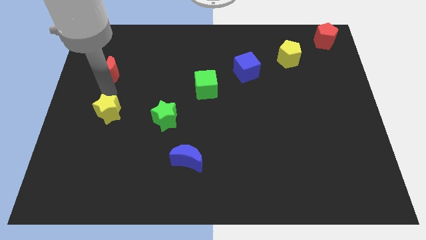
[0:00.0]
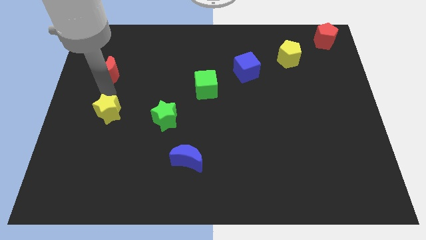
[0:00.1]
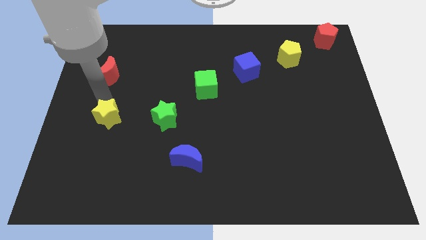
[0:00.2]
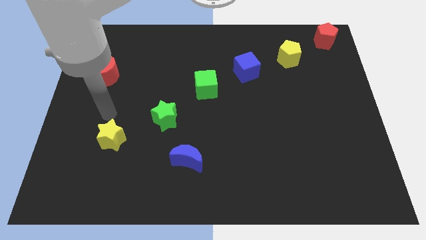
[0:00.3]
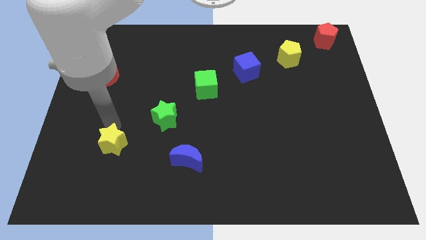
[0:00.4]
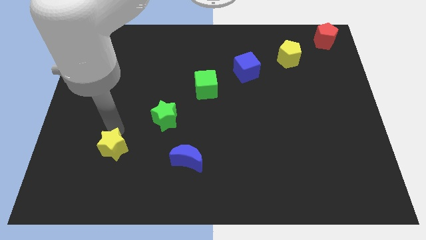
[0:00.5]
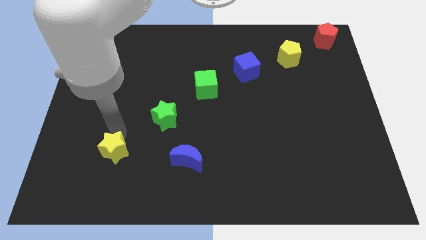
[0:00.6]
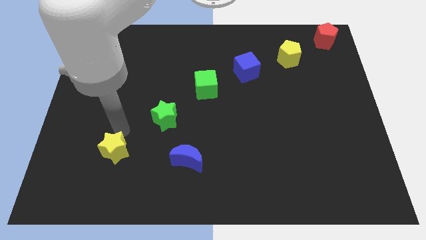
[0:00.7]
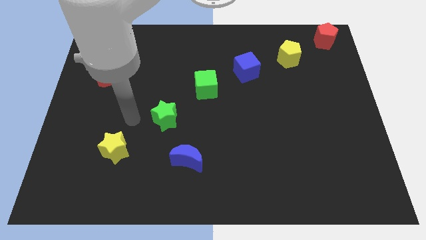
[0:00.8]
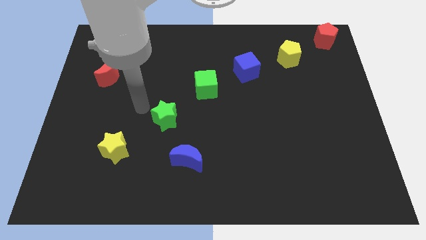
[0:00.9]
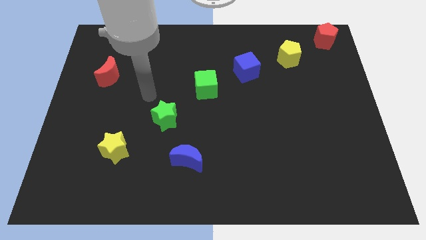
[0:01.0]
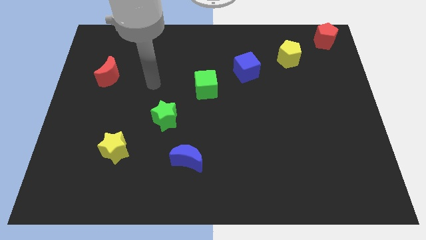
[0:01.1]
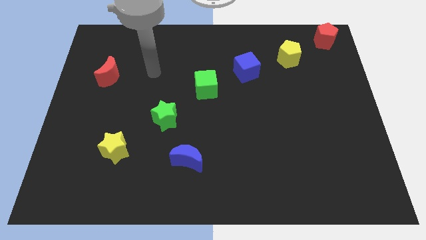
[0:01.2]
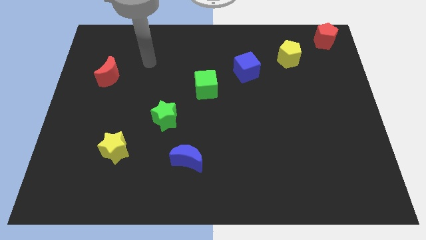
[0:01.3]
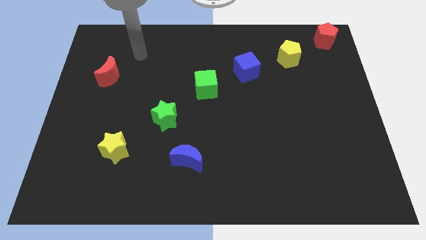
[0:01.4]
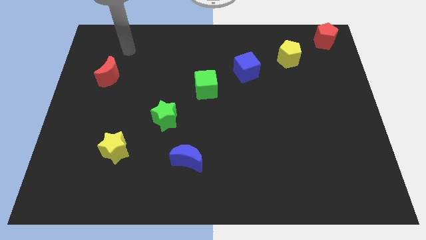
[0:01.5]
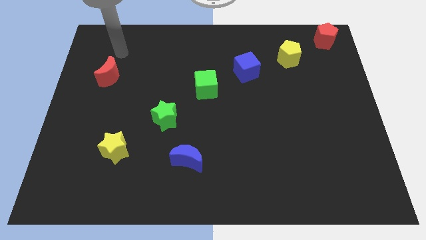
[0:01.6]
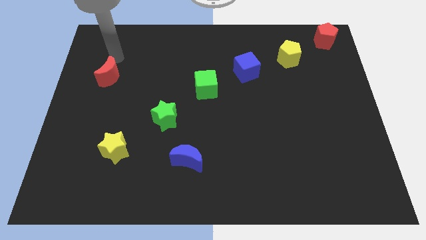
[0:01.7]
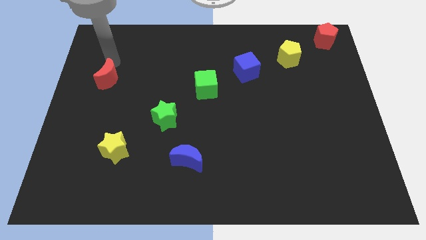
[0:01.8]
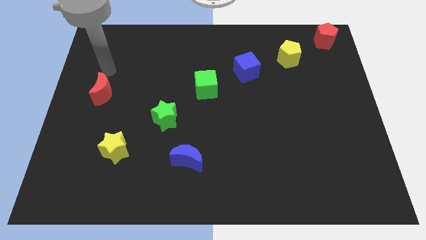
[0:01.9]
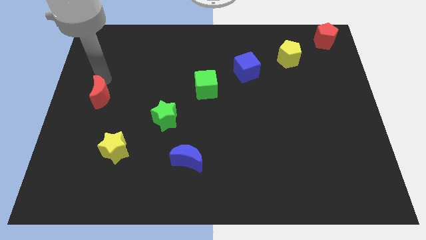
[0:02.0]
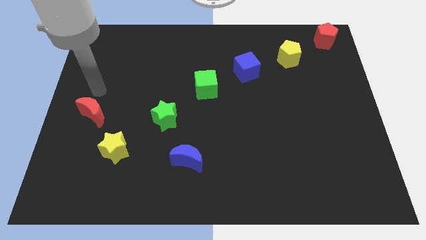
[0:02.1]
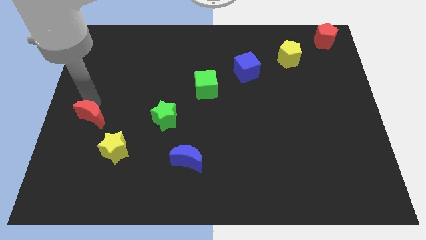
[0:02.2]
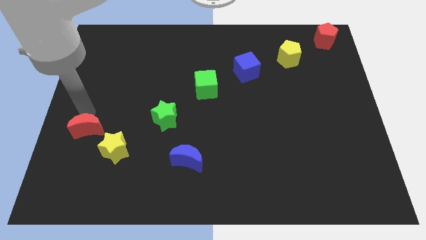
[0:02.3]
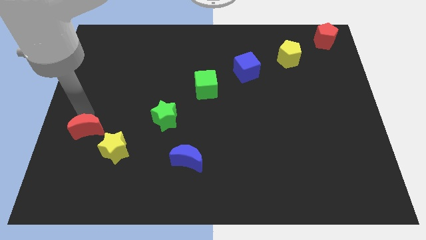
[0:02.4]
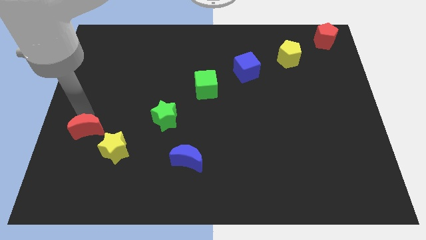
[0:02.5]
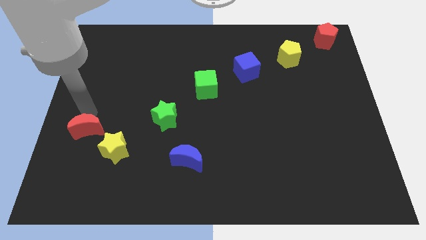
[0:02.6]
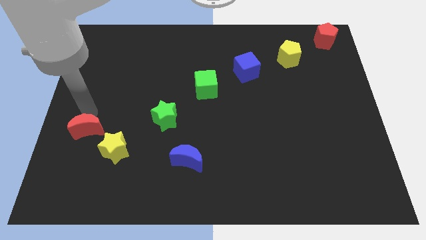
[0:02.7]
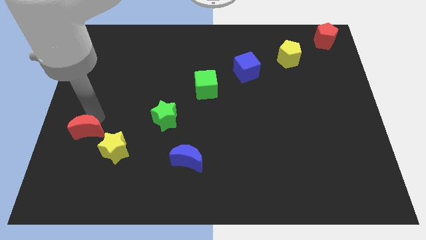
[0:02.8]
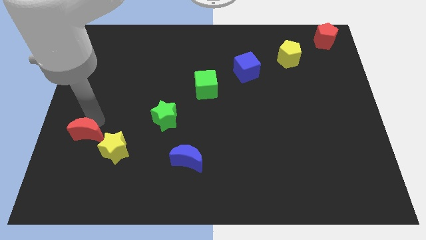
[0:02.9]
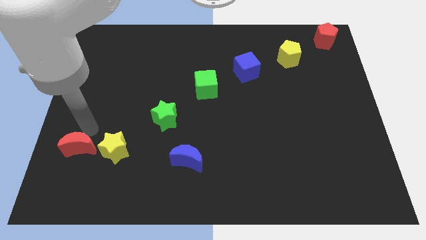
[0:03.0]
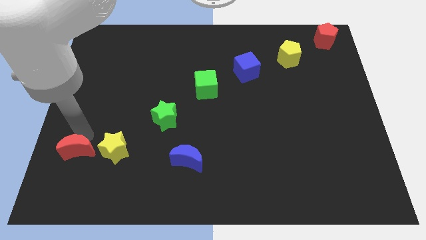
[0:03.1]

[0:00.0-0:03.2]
slide the red moon horizontally left of the yellow star

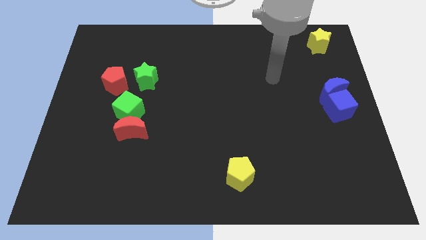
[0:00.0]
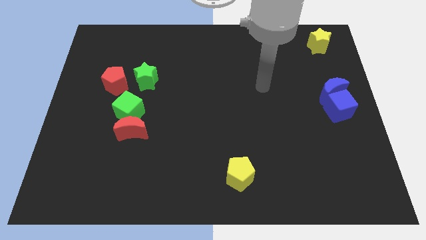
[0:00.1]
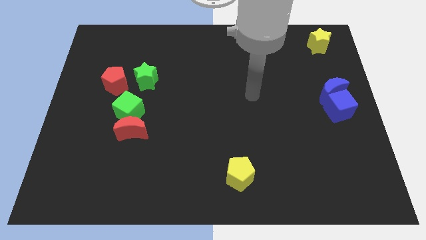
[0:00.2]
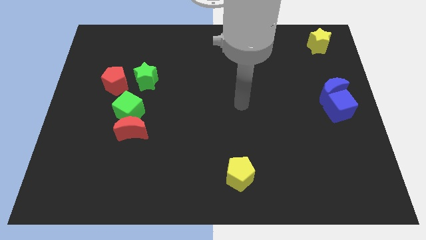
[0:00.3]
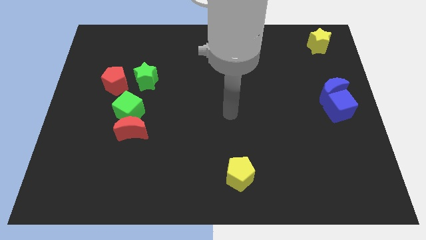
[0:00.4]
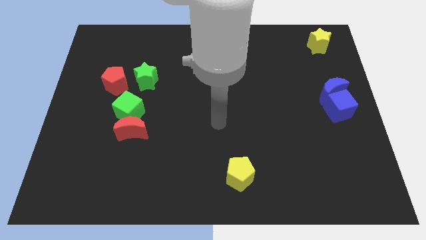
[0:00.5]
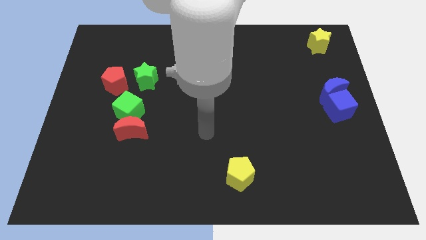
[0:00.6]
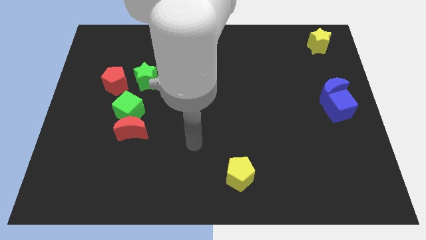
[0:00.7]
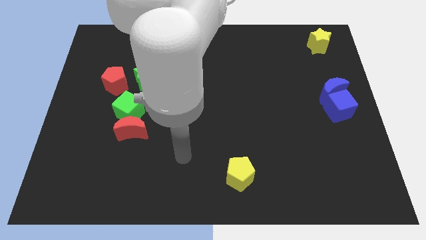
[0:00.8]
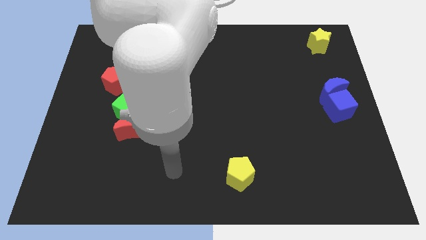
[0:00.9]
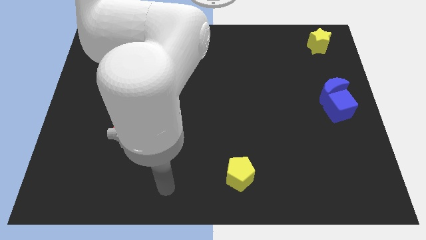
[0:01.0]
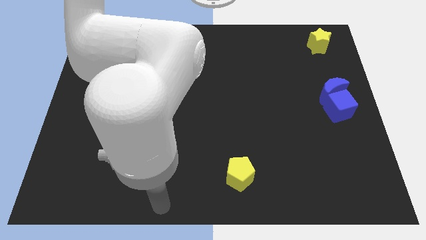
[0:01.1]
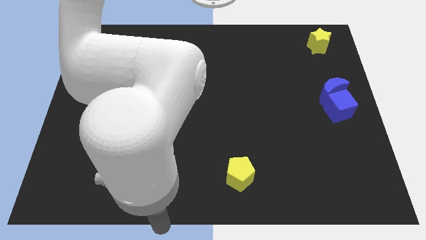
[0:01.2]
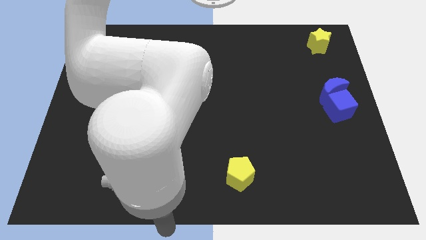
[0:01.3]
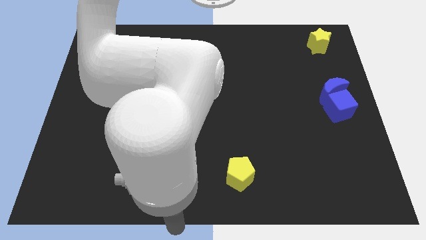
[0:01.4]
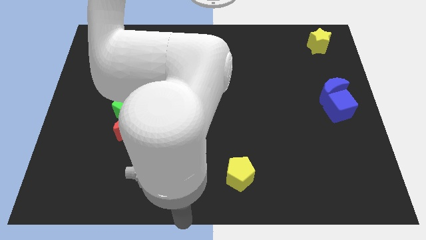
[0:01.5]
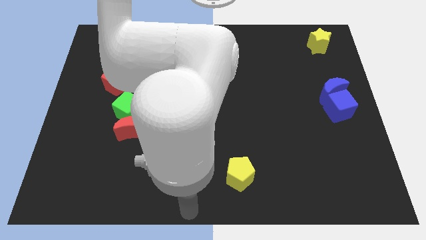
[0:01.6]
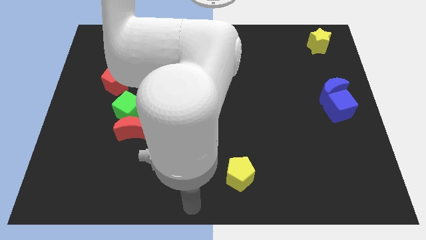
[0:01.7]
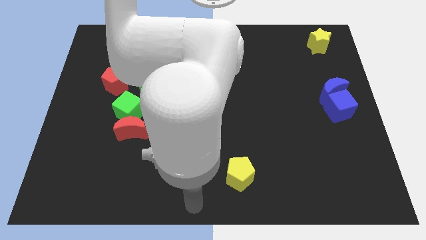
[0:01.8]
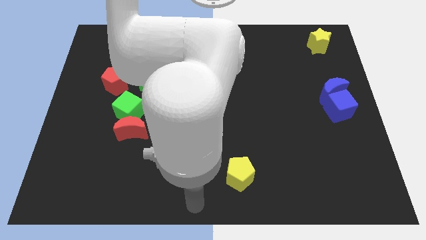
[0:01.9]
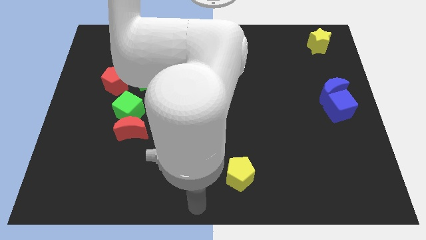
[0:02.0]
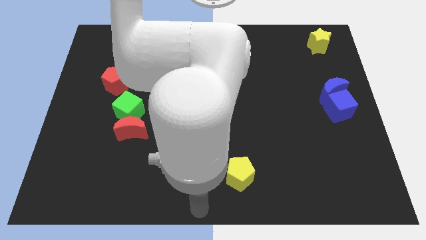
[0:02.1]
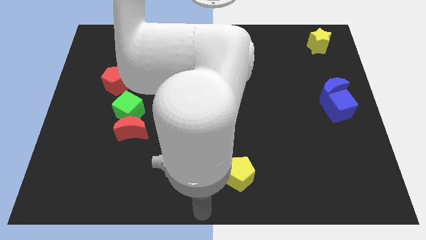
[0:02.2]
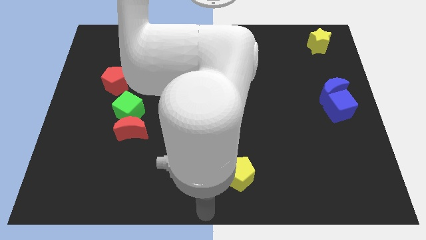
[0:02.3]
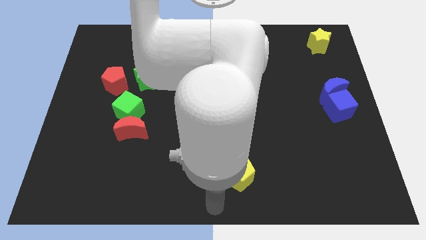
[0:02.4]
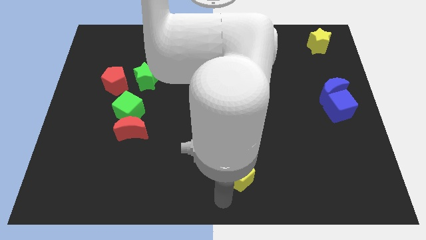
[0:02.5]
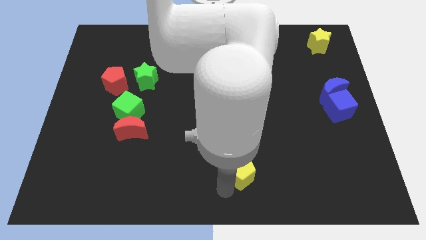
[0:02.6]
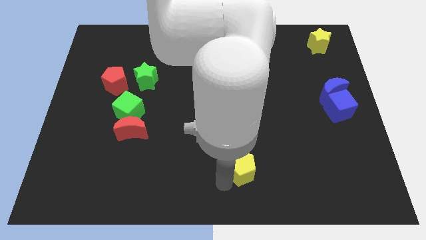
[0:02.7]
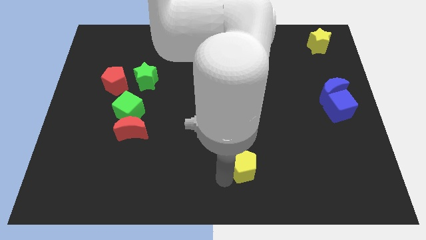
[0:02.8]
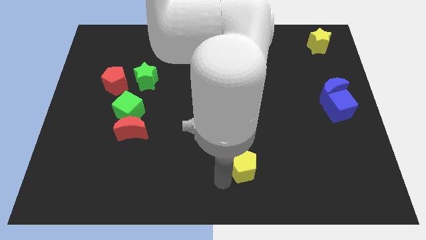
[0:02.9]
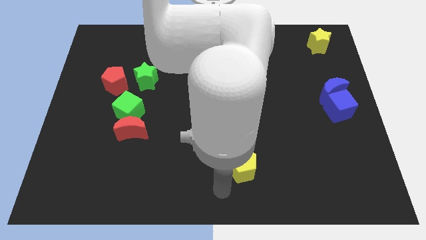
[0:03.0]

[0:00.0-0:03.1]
move your arm towards the bottom of the yellow pentagon

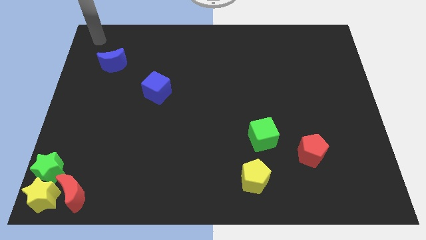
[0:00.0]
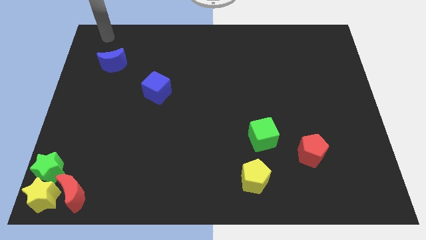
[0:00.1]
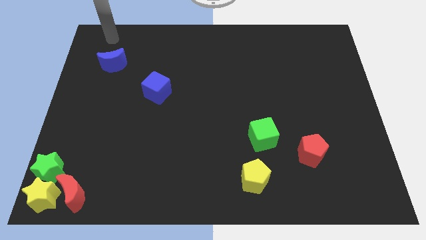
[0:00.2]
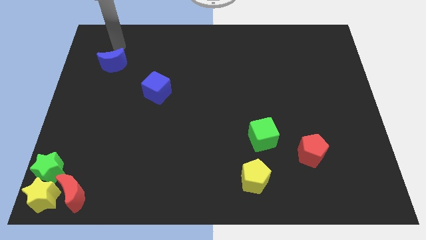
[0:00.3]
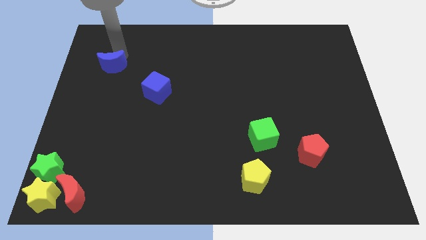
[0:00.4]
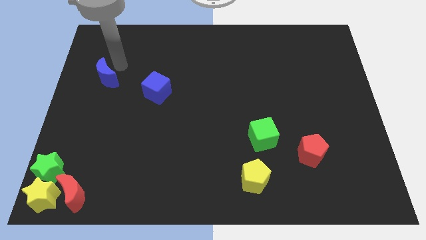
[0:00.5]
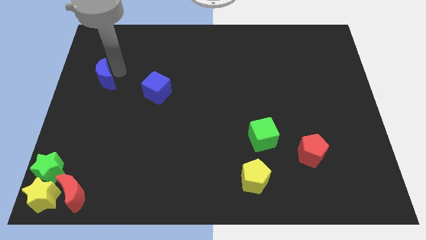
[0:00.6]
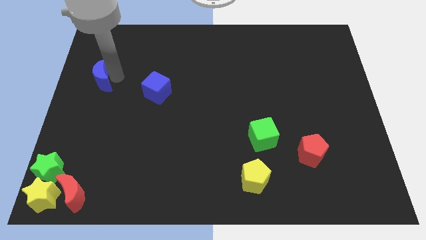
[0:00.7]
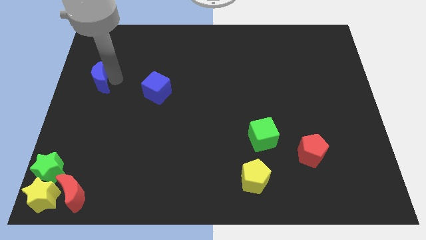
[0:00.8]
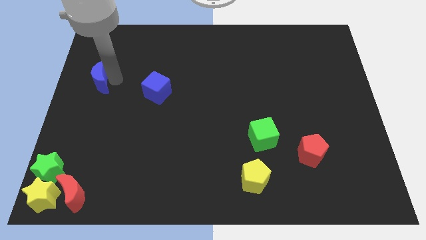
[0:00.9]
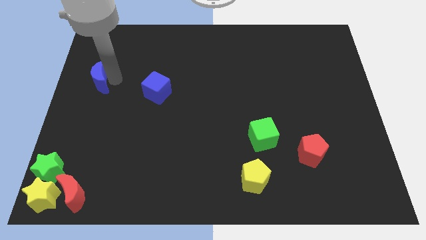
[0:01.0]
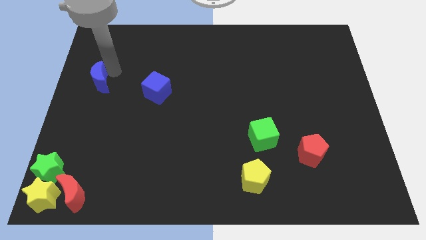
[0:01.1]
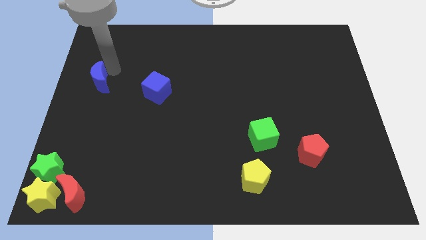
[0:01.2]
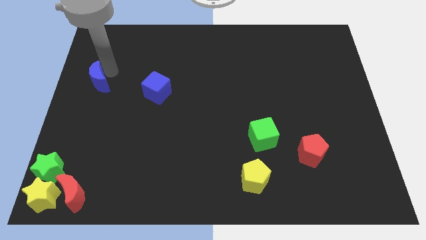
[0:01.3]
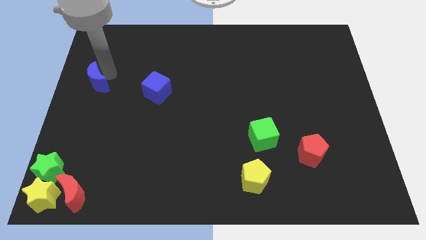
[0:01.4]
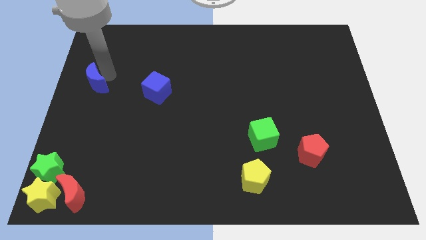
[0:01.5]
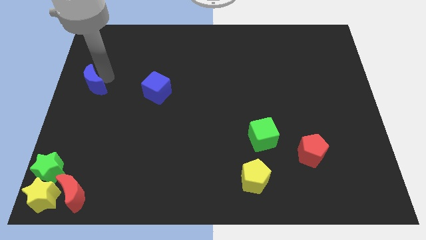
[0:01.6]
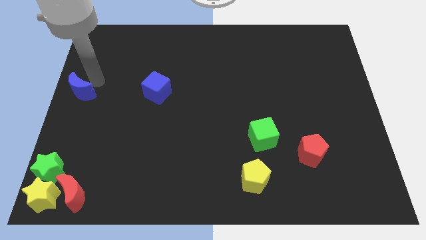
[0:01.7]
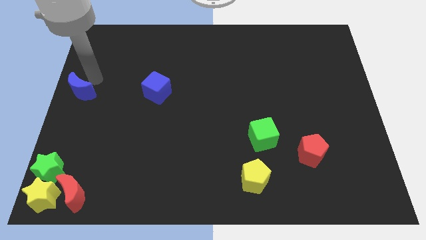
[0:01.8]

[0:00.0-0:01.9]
move the blue moon to the left of the blue cube

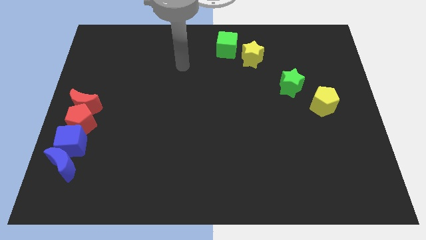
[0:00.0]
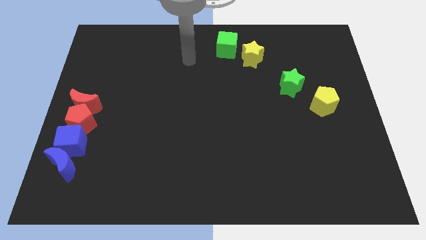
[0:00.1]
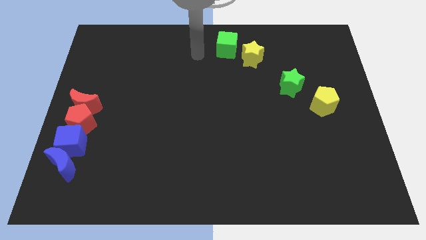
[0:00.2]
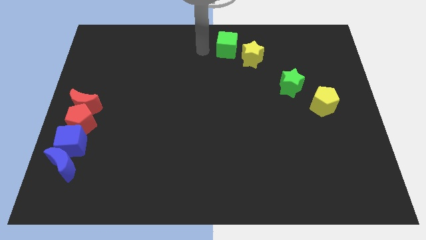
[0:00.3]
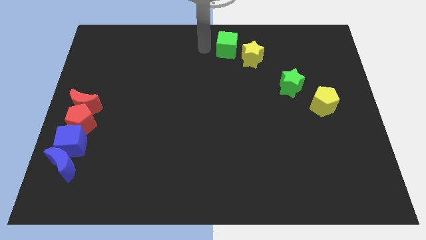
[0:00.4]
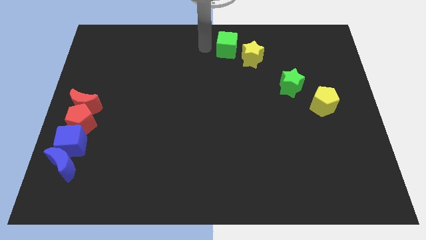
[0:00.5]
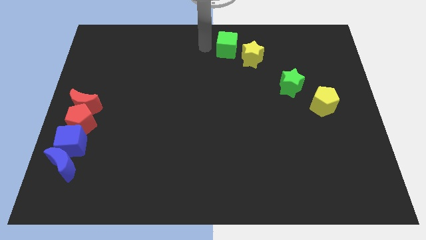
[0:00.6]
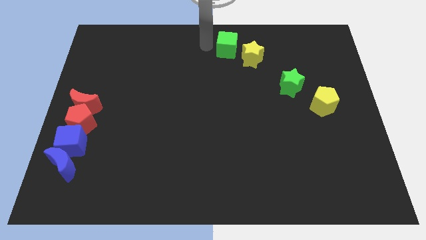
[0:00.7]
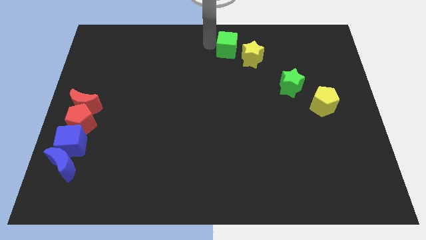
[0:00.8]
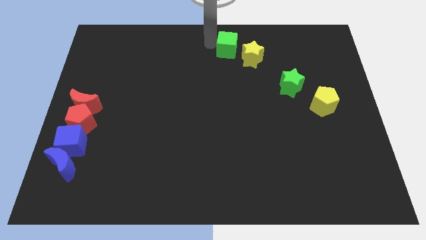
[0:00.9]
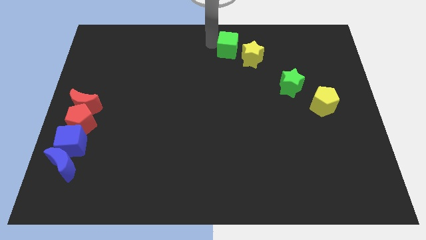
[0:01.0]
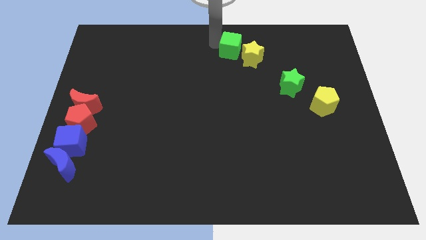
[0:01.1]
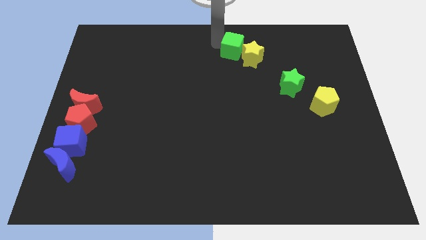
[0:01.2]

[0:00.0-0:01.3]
move the green cube to the left of the yellow star
